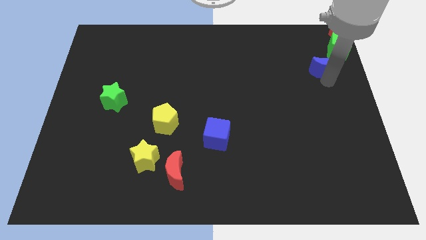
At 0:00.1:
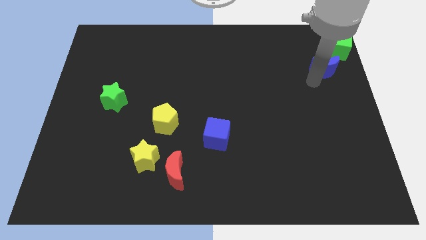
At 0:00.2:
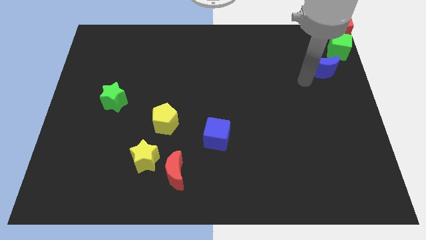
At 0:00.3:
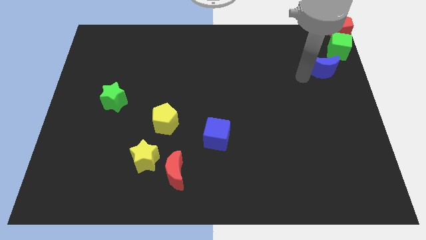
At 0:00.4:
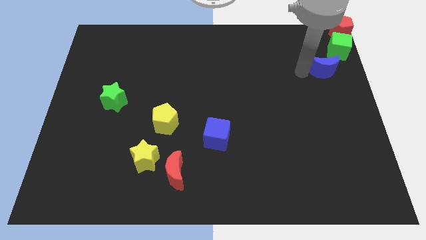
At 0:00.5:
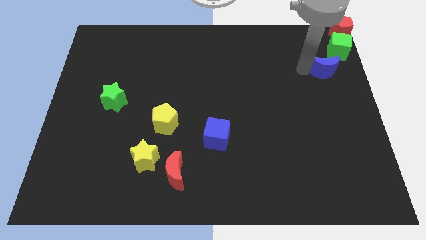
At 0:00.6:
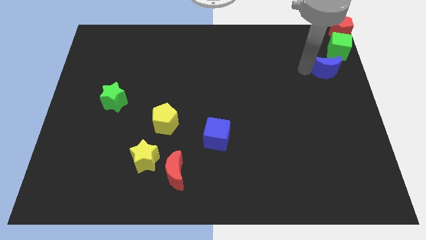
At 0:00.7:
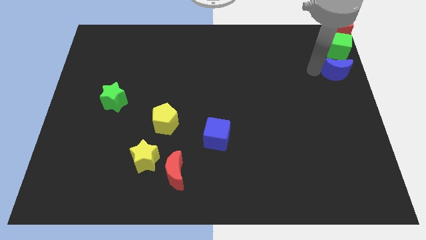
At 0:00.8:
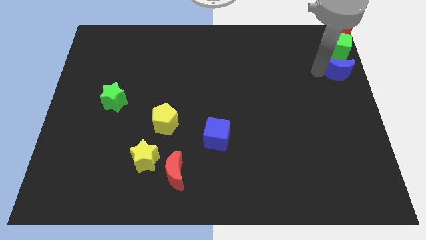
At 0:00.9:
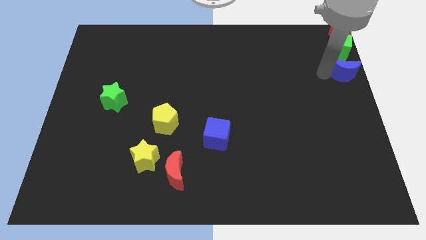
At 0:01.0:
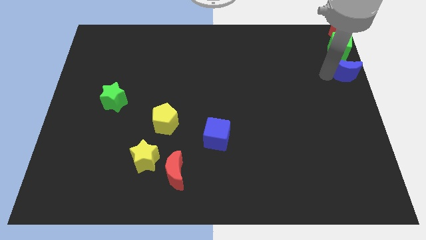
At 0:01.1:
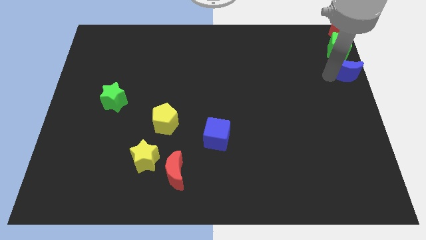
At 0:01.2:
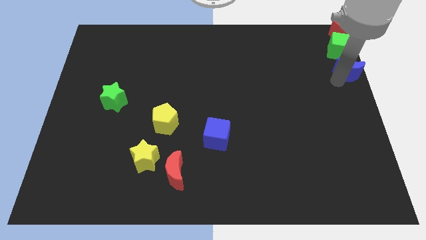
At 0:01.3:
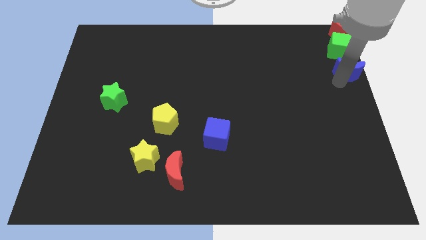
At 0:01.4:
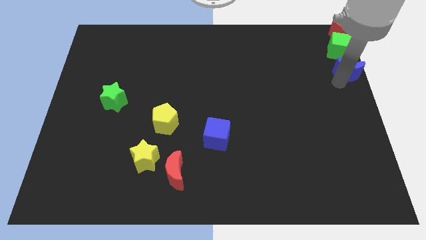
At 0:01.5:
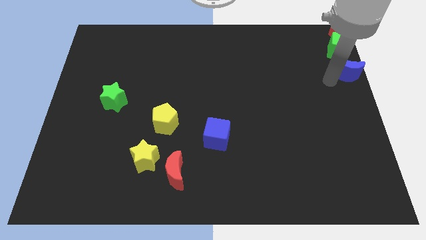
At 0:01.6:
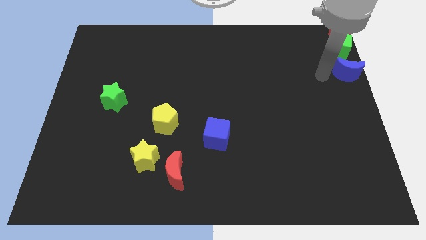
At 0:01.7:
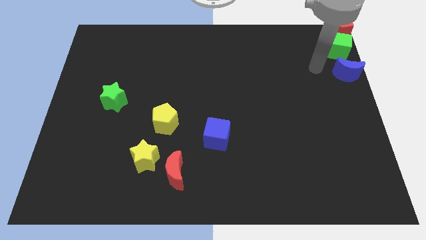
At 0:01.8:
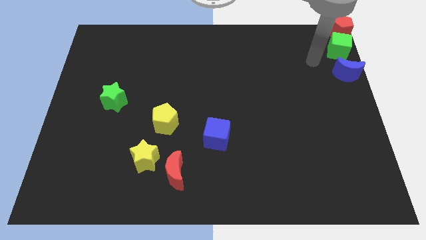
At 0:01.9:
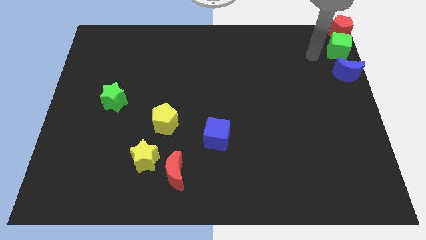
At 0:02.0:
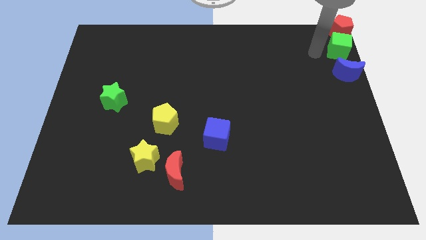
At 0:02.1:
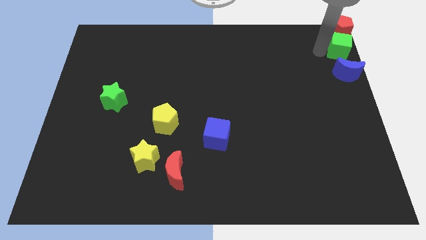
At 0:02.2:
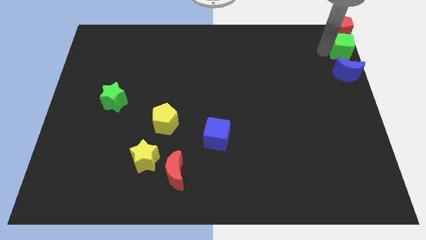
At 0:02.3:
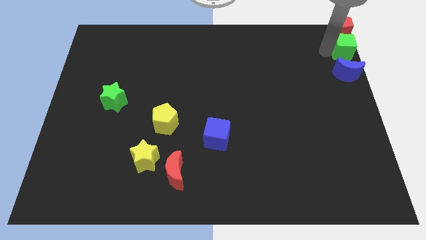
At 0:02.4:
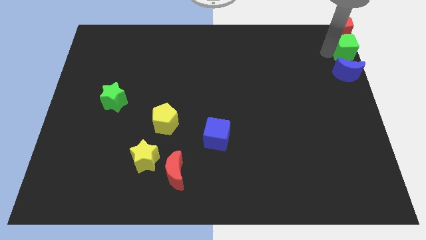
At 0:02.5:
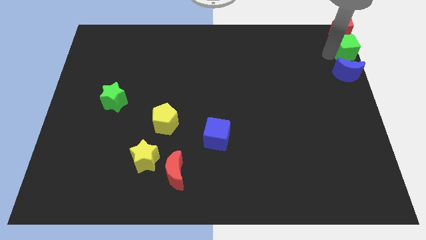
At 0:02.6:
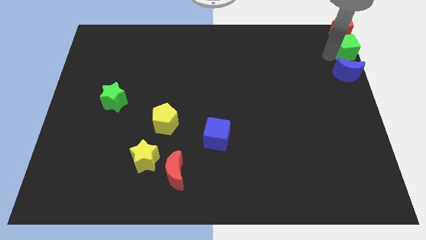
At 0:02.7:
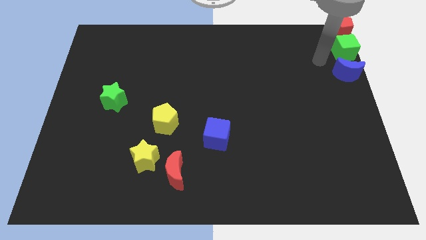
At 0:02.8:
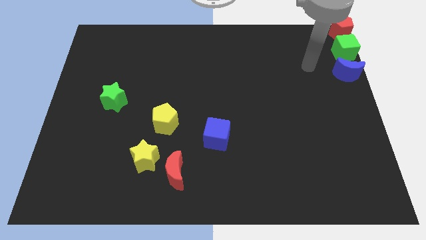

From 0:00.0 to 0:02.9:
make a vertical line with red pentagon green cube blue moon

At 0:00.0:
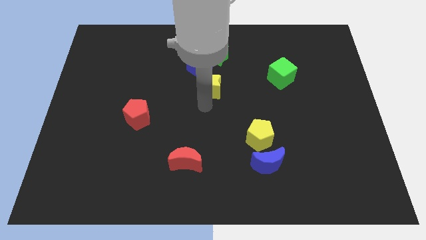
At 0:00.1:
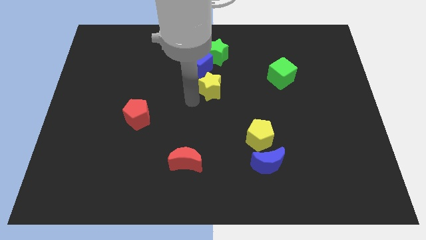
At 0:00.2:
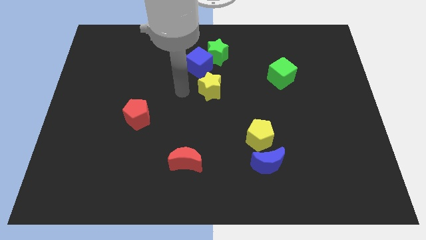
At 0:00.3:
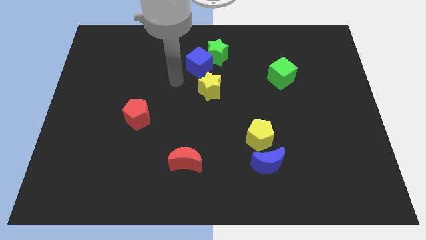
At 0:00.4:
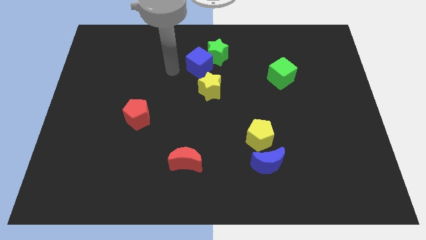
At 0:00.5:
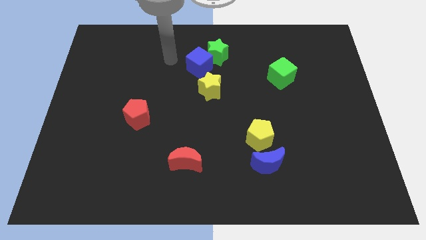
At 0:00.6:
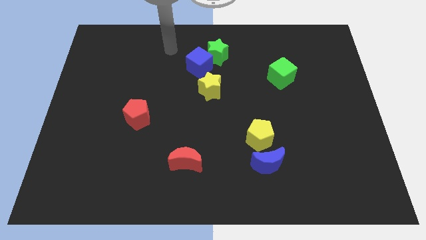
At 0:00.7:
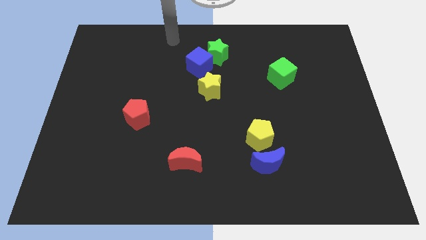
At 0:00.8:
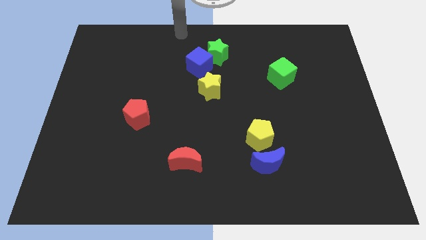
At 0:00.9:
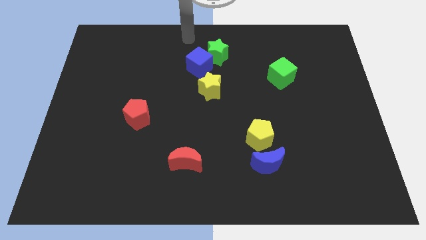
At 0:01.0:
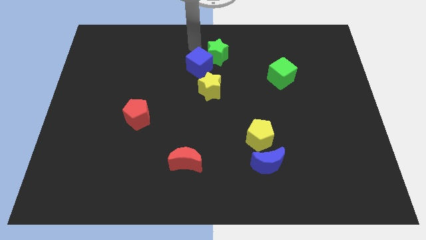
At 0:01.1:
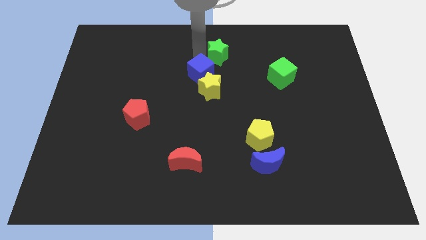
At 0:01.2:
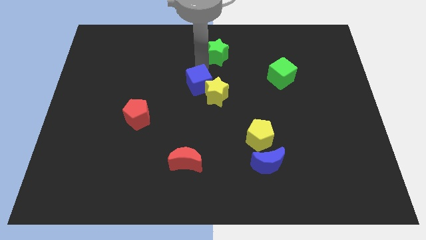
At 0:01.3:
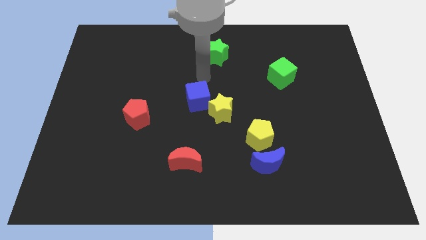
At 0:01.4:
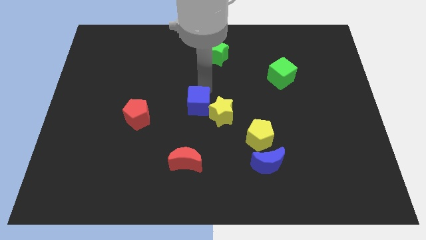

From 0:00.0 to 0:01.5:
move the blue cube into the yellow star

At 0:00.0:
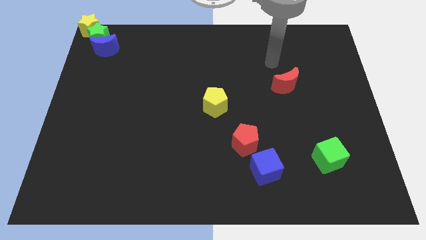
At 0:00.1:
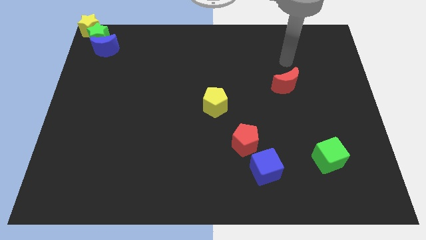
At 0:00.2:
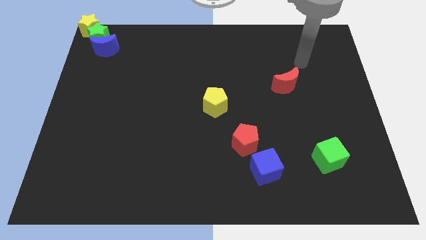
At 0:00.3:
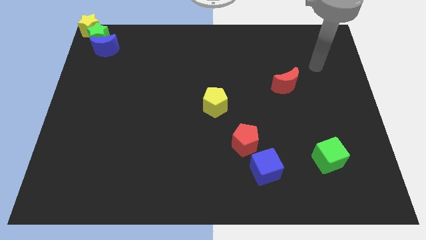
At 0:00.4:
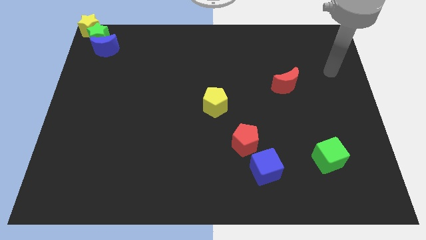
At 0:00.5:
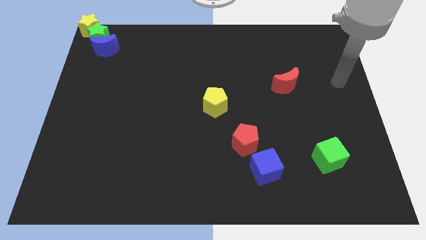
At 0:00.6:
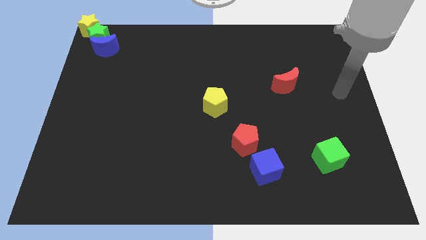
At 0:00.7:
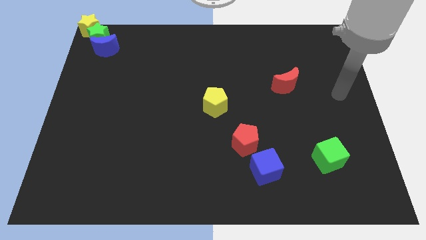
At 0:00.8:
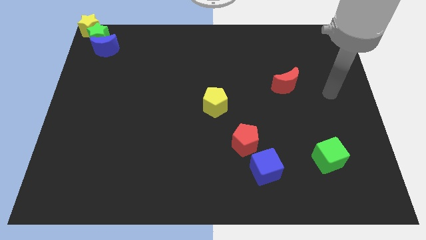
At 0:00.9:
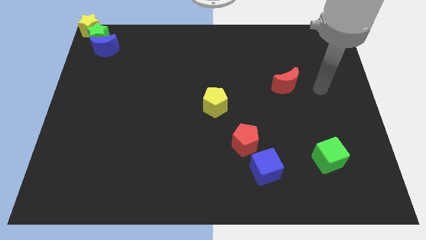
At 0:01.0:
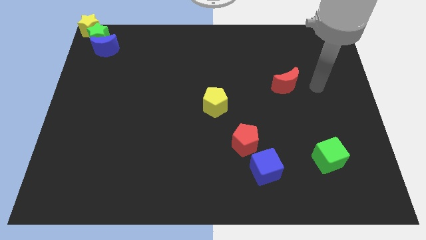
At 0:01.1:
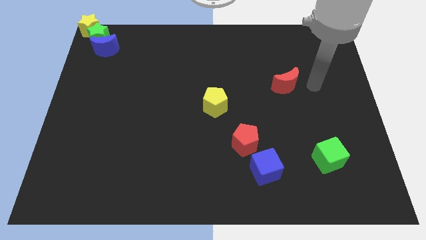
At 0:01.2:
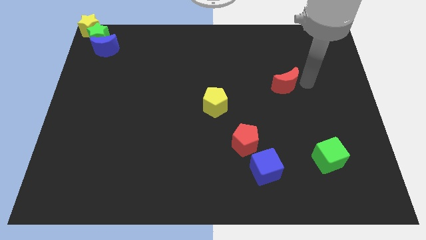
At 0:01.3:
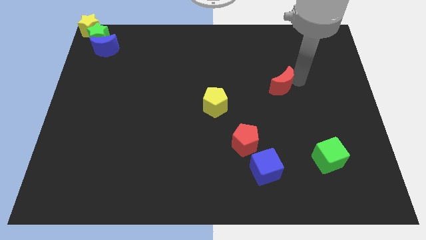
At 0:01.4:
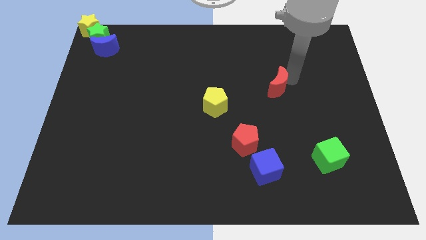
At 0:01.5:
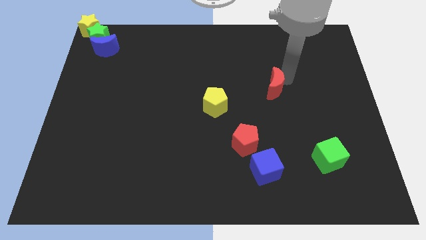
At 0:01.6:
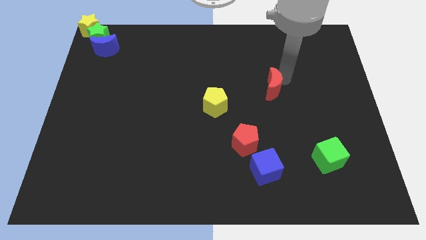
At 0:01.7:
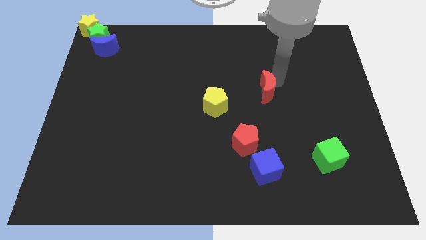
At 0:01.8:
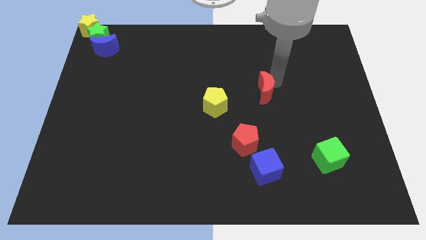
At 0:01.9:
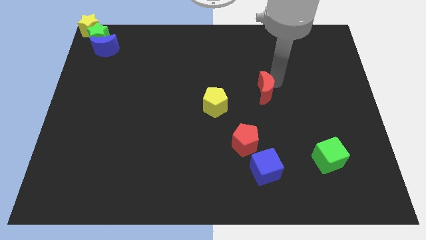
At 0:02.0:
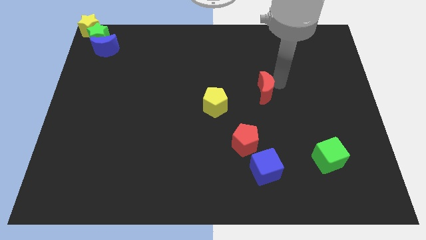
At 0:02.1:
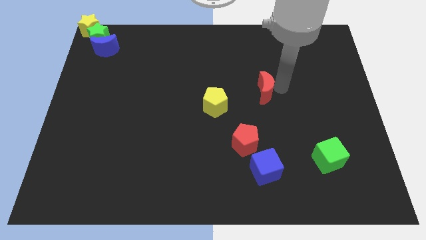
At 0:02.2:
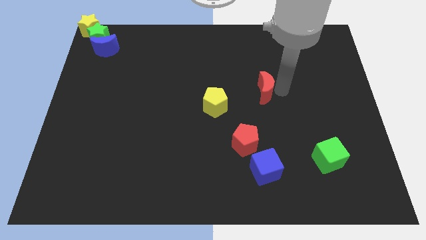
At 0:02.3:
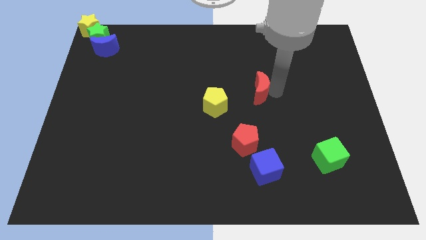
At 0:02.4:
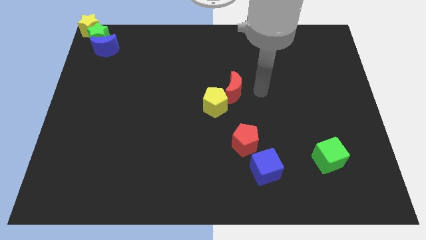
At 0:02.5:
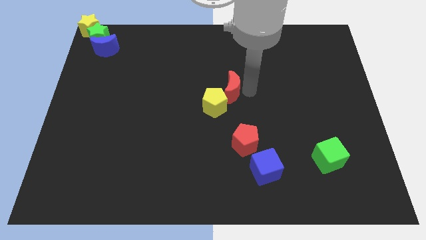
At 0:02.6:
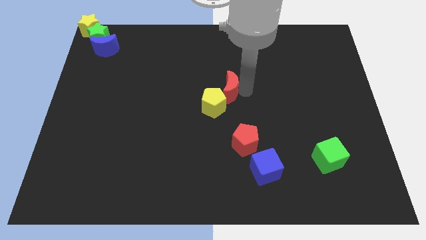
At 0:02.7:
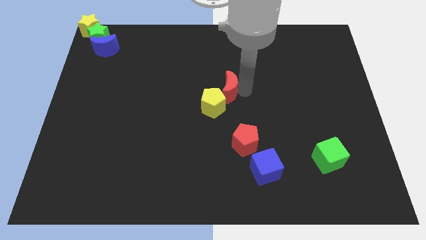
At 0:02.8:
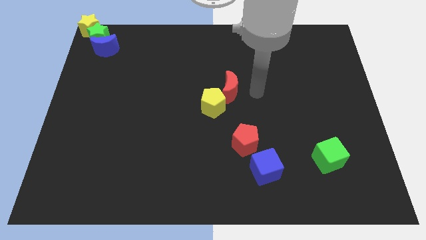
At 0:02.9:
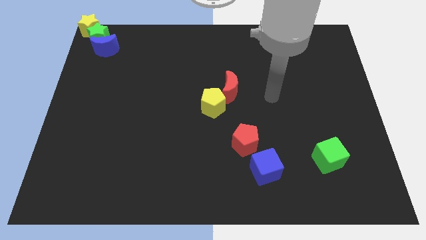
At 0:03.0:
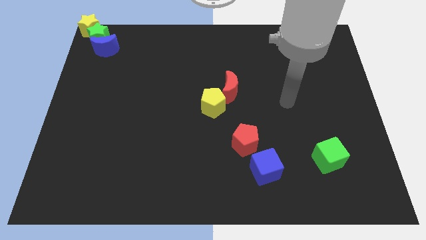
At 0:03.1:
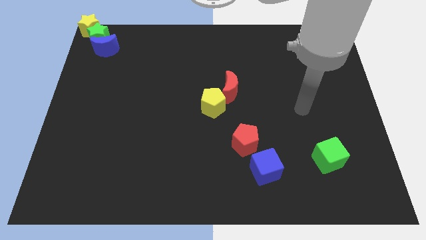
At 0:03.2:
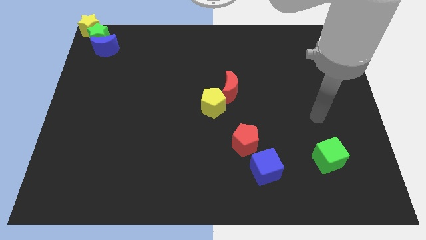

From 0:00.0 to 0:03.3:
push the red moon into yellow pentagon

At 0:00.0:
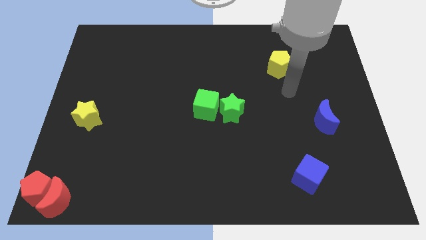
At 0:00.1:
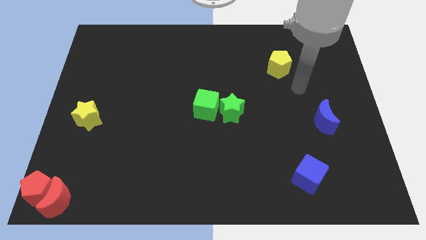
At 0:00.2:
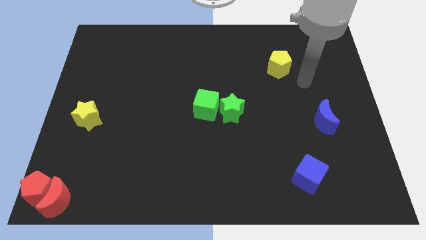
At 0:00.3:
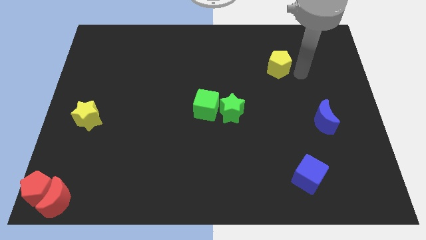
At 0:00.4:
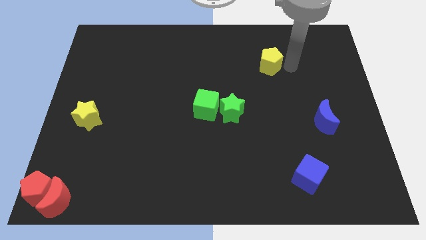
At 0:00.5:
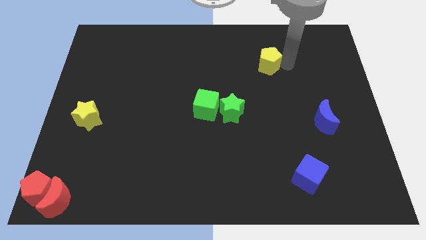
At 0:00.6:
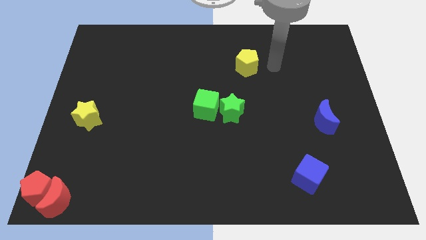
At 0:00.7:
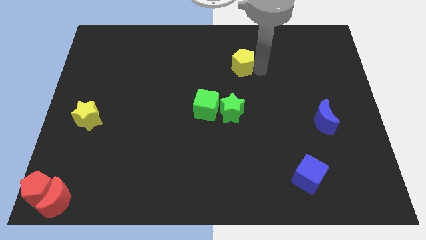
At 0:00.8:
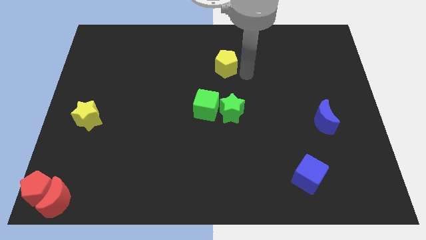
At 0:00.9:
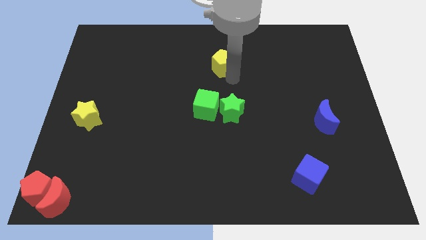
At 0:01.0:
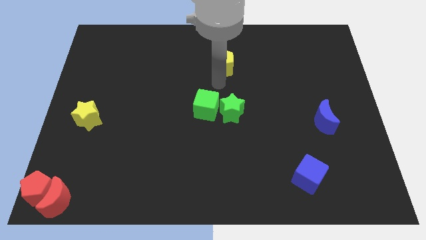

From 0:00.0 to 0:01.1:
place yellow pentagon above green blocks

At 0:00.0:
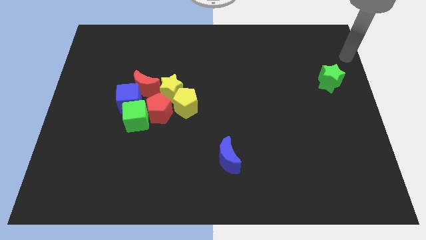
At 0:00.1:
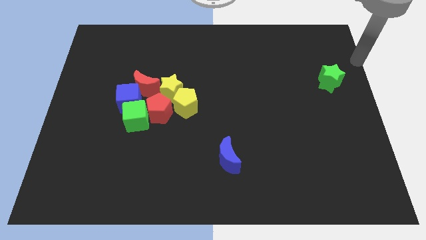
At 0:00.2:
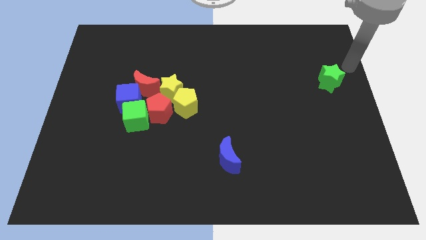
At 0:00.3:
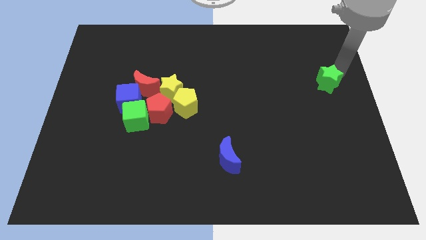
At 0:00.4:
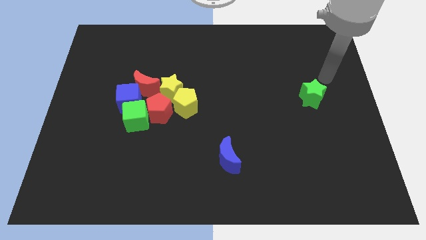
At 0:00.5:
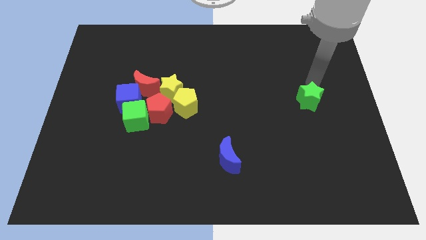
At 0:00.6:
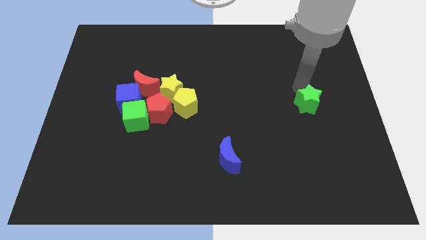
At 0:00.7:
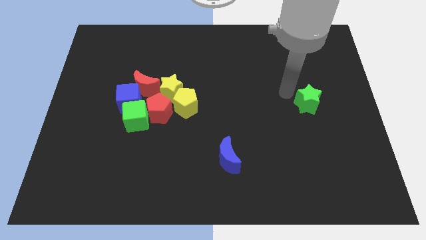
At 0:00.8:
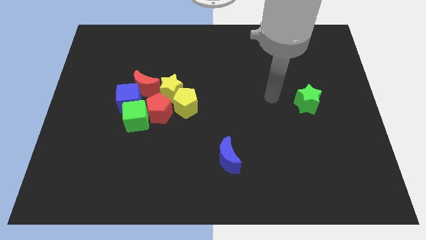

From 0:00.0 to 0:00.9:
put the green star parallel to the group of blocks
